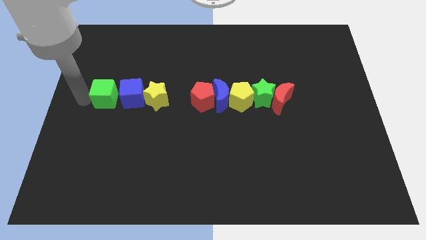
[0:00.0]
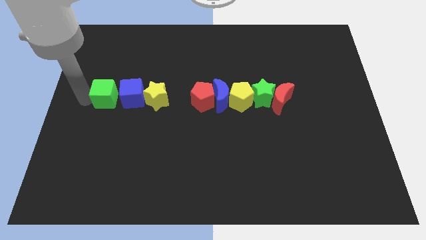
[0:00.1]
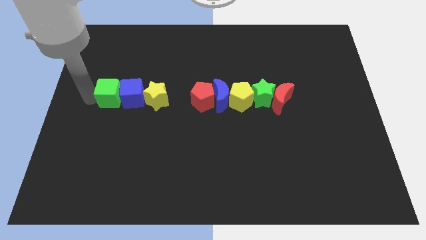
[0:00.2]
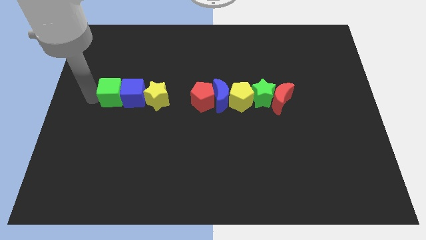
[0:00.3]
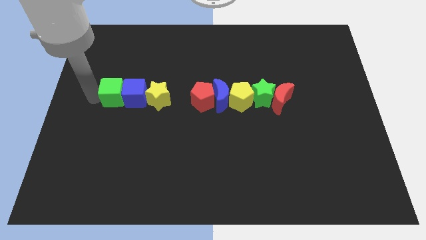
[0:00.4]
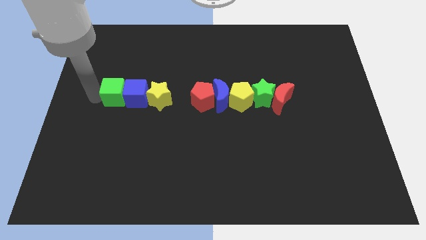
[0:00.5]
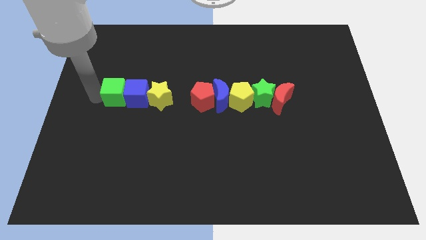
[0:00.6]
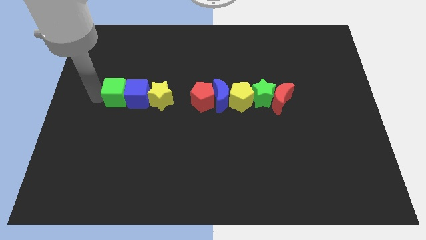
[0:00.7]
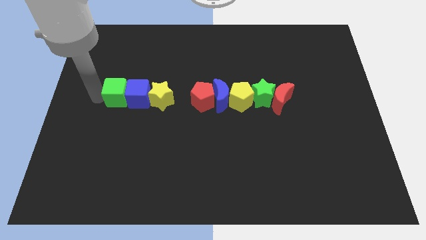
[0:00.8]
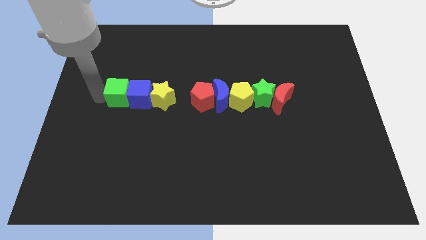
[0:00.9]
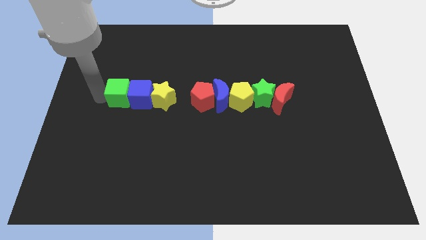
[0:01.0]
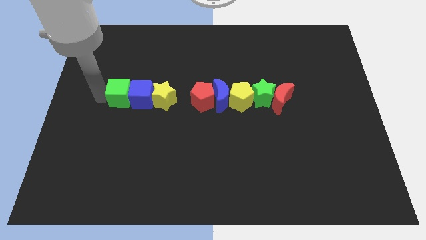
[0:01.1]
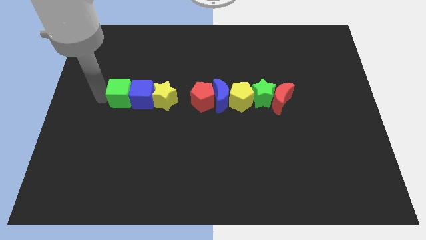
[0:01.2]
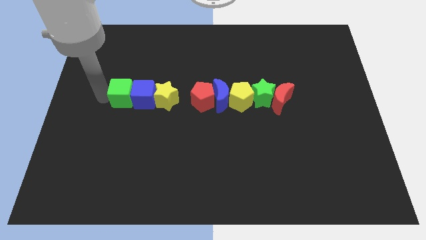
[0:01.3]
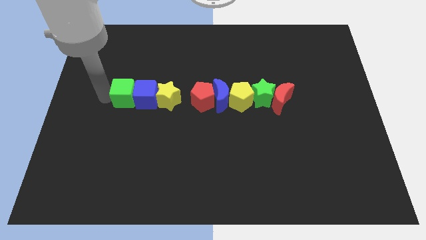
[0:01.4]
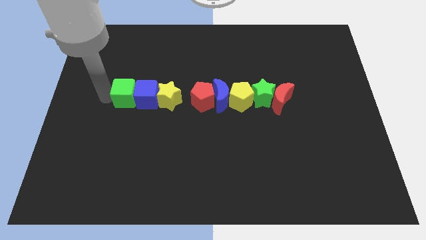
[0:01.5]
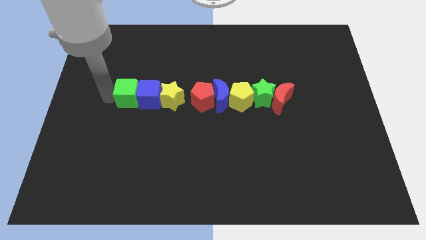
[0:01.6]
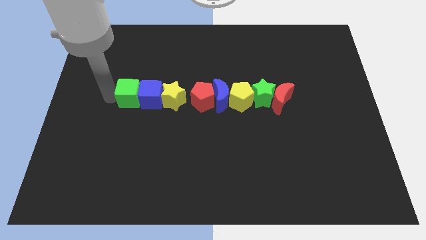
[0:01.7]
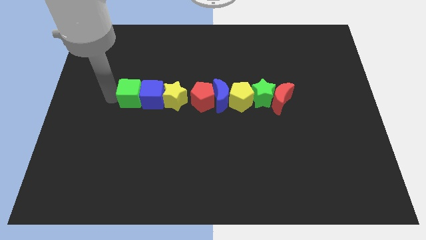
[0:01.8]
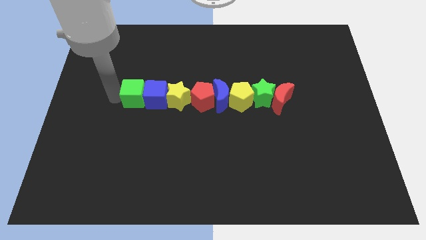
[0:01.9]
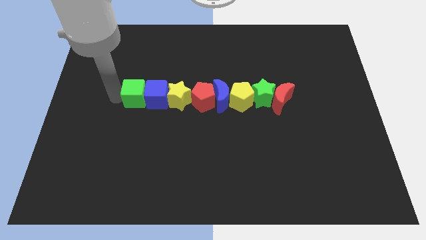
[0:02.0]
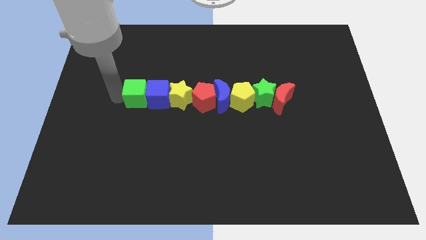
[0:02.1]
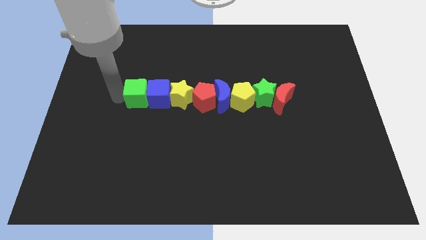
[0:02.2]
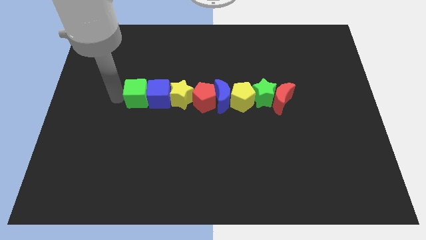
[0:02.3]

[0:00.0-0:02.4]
push green cube slightly towards right side

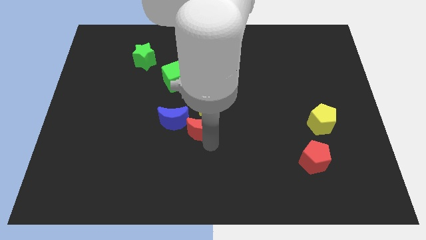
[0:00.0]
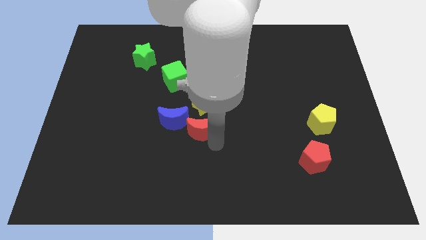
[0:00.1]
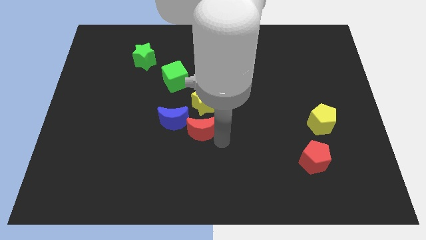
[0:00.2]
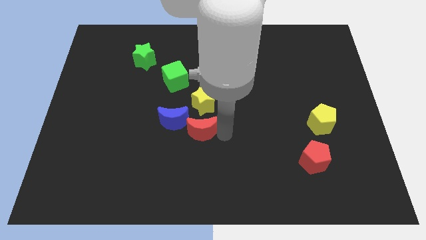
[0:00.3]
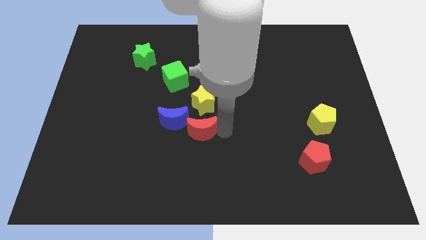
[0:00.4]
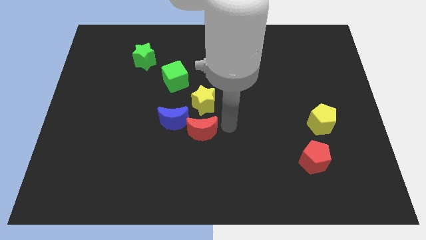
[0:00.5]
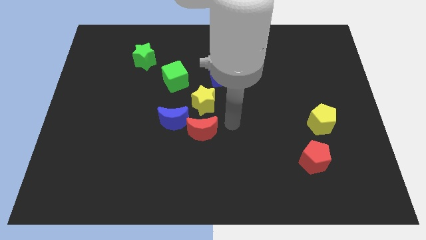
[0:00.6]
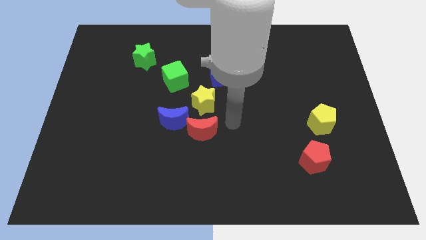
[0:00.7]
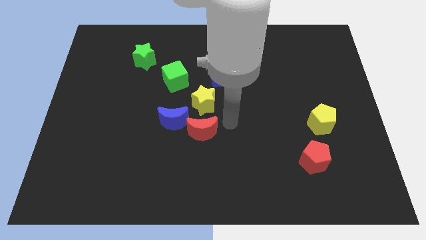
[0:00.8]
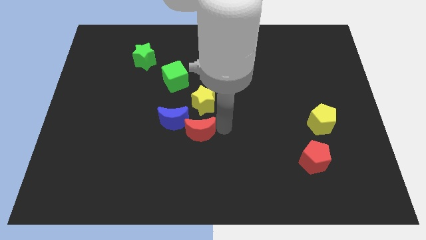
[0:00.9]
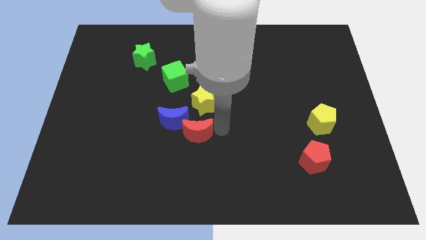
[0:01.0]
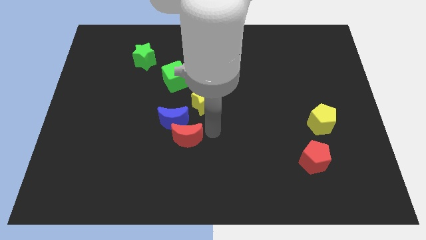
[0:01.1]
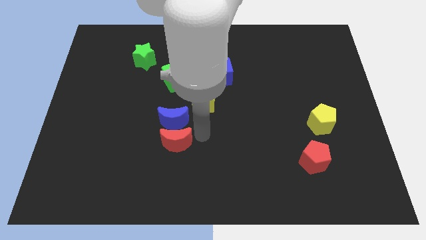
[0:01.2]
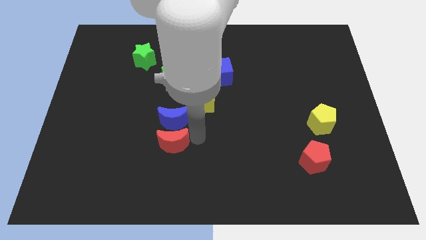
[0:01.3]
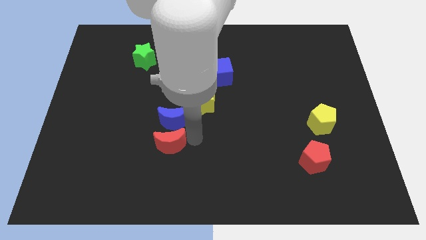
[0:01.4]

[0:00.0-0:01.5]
put the red crescent below the blue crescent

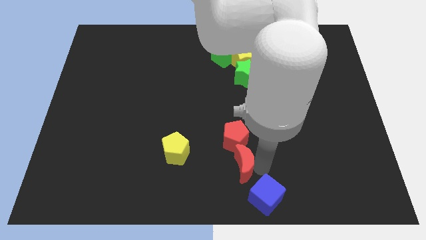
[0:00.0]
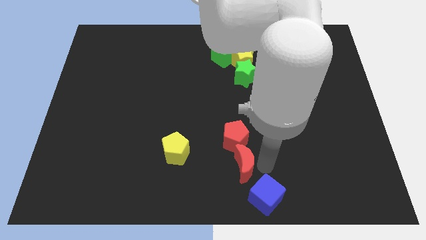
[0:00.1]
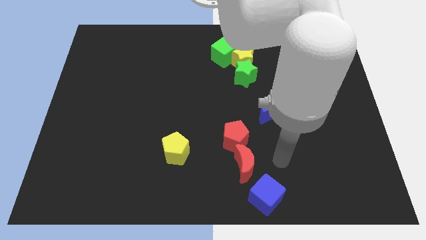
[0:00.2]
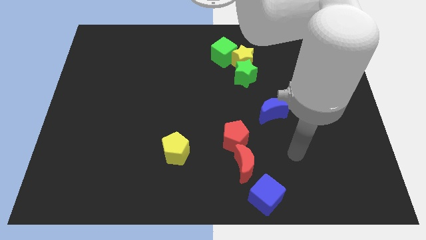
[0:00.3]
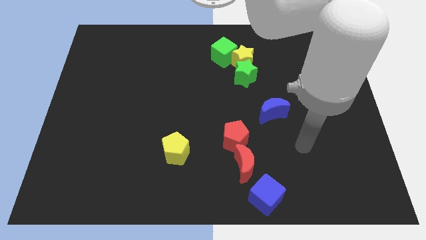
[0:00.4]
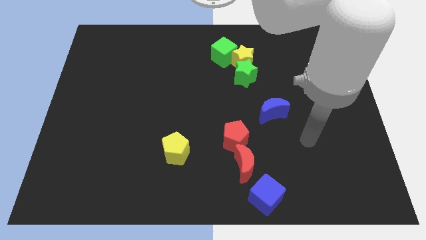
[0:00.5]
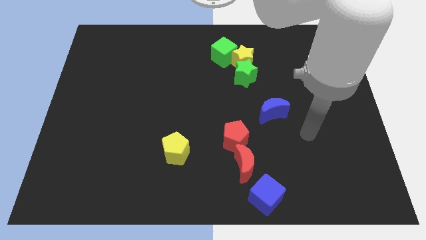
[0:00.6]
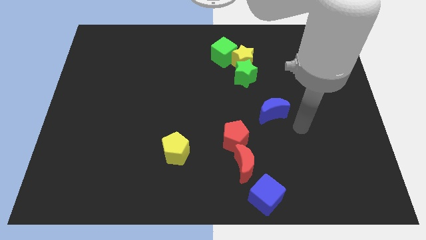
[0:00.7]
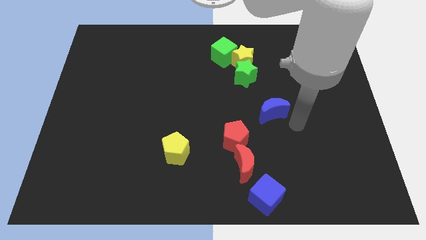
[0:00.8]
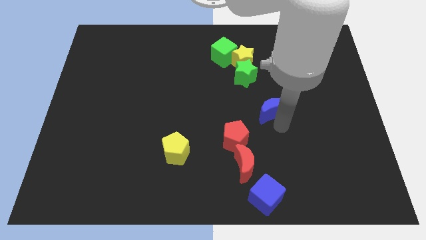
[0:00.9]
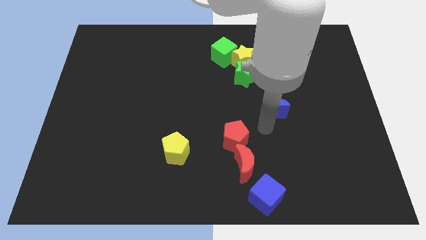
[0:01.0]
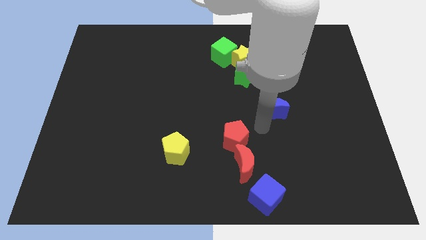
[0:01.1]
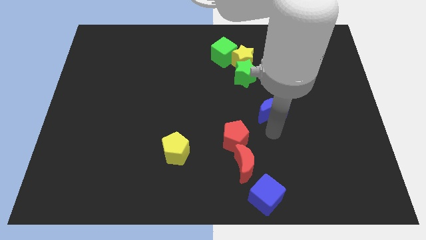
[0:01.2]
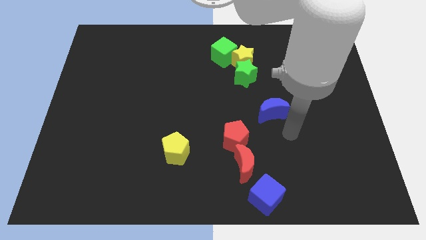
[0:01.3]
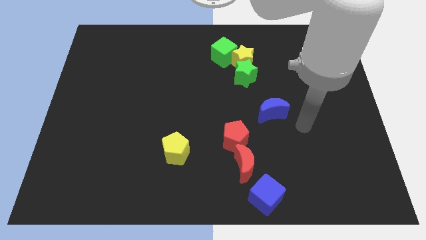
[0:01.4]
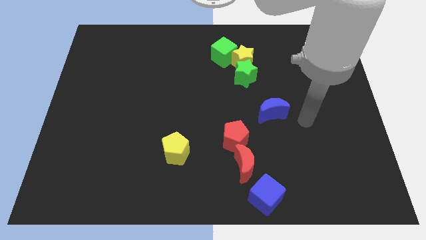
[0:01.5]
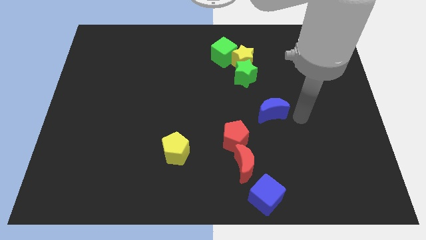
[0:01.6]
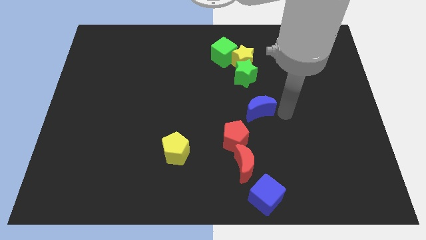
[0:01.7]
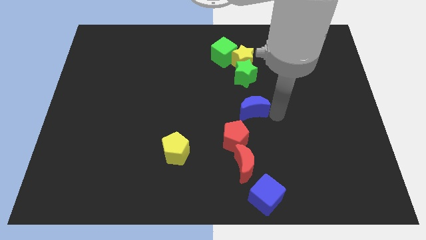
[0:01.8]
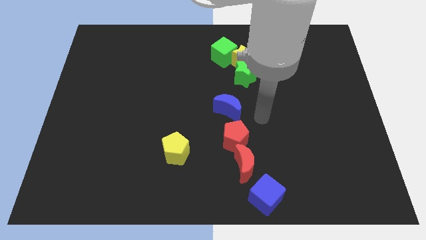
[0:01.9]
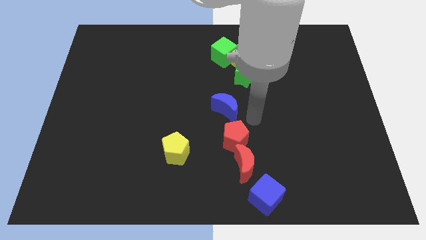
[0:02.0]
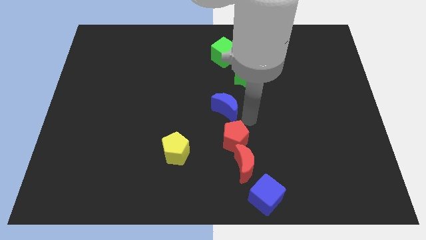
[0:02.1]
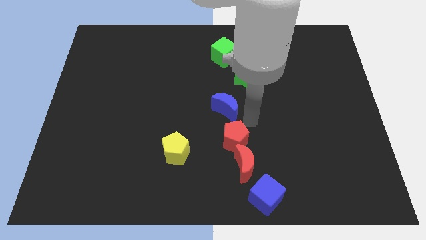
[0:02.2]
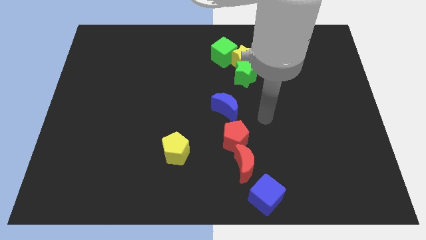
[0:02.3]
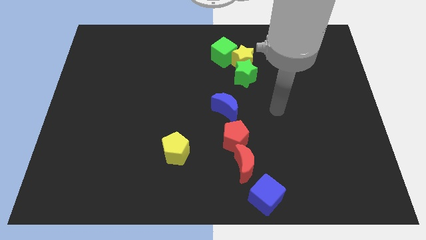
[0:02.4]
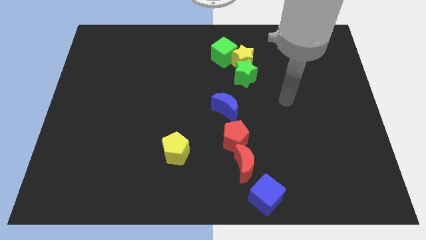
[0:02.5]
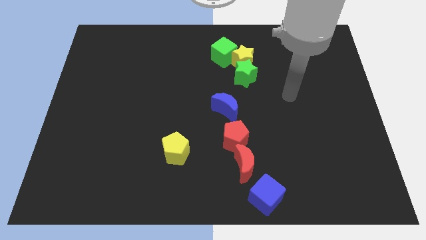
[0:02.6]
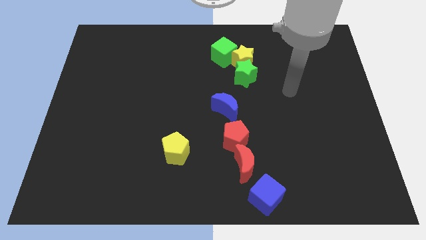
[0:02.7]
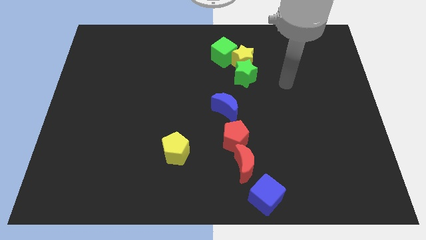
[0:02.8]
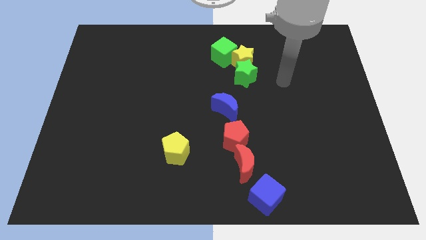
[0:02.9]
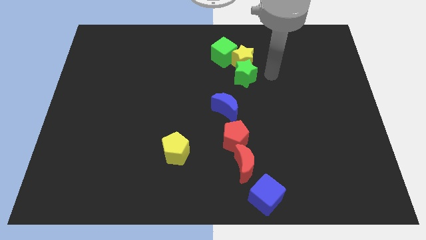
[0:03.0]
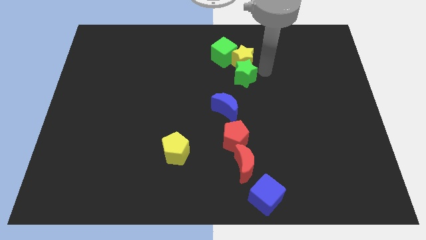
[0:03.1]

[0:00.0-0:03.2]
place the blue crescent above the red pentagon

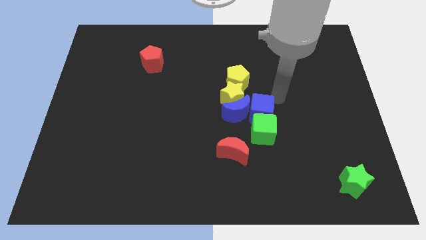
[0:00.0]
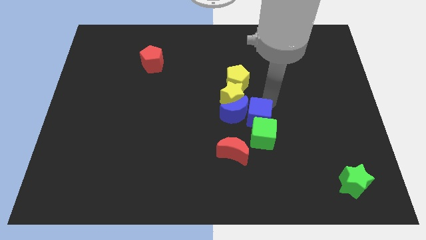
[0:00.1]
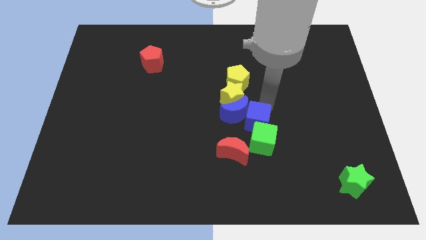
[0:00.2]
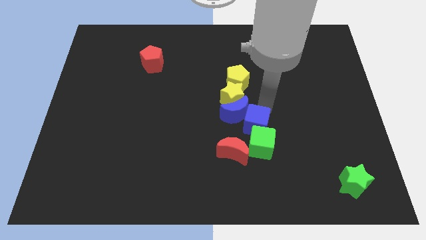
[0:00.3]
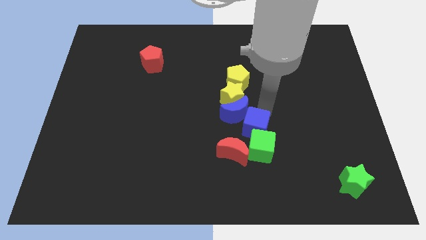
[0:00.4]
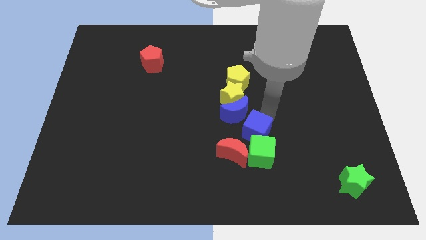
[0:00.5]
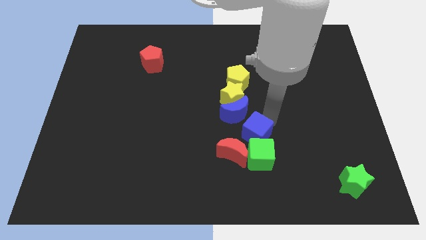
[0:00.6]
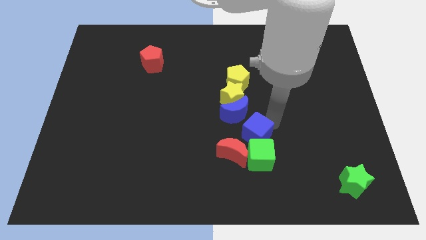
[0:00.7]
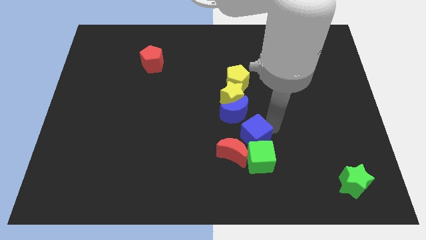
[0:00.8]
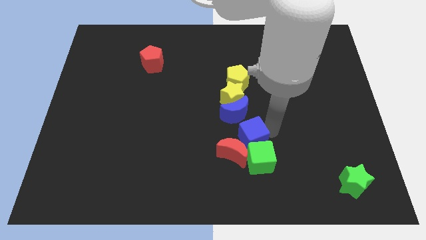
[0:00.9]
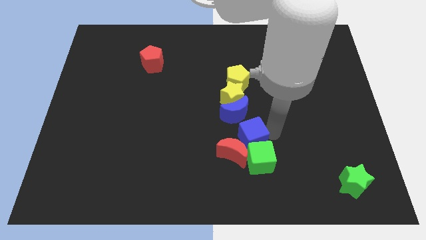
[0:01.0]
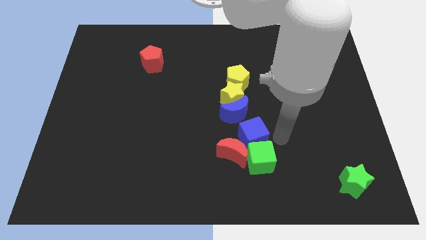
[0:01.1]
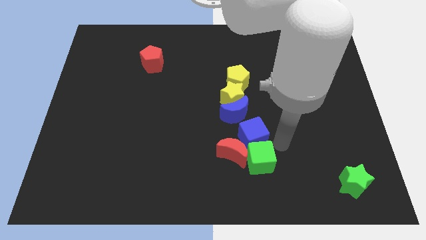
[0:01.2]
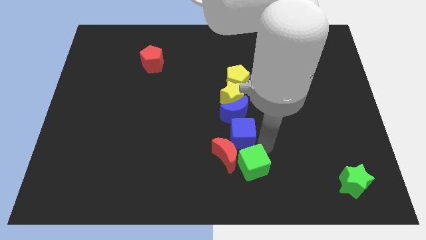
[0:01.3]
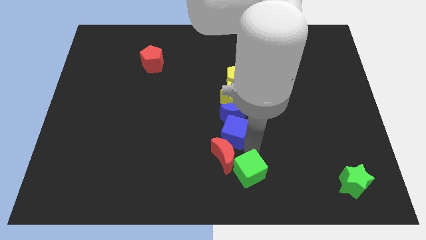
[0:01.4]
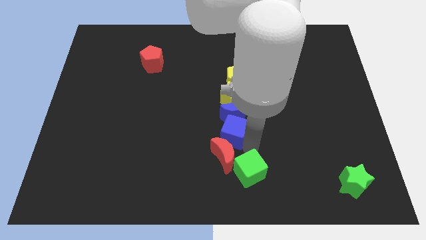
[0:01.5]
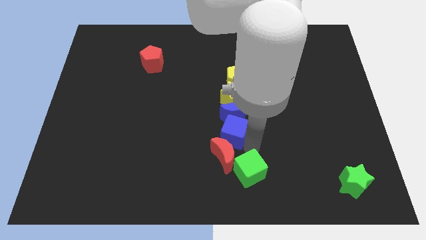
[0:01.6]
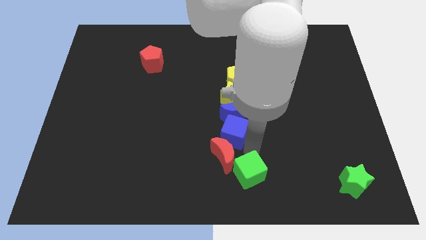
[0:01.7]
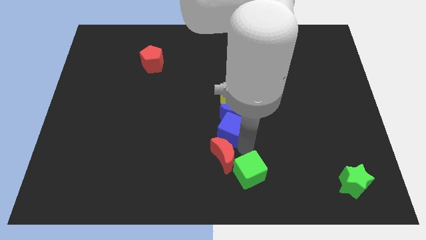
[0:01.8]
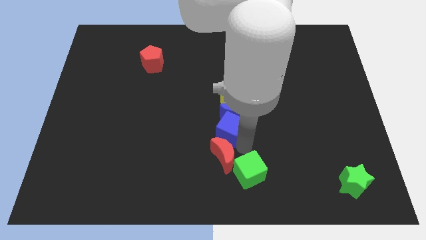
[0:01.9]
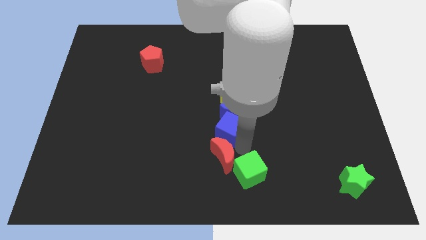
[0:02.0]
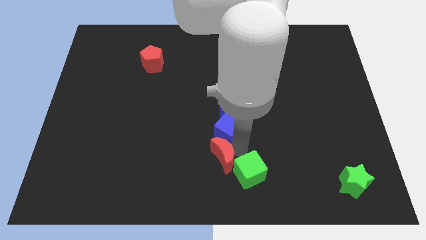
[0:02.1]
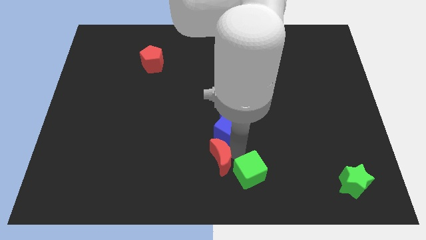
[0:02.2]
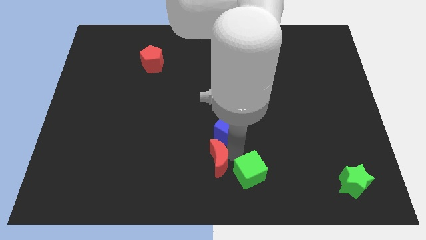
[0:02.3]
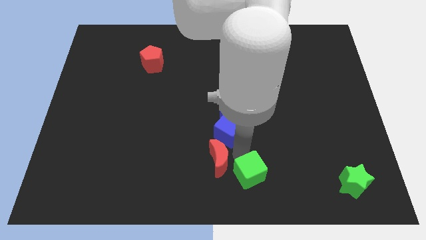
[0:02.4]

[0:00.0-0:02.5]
push the cubes and separate with the red moon
